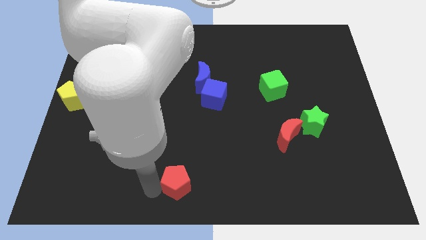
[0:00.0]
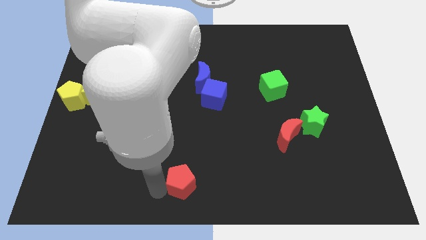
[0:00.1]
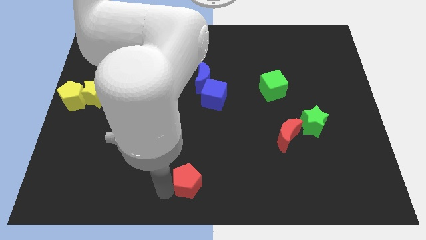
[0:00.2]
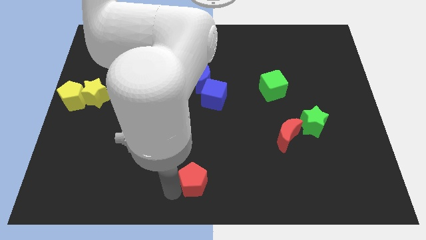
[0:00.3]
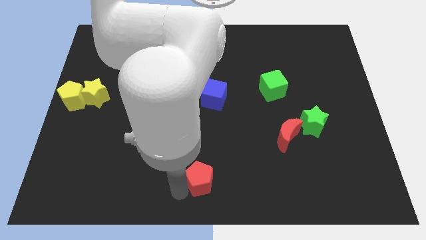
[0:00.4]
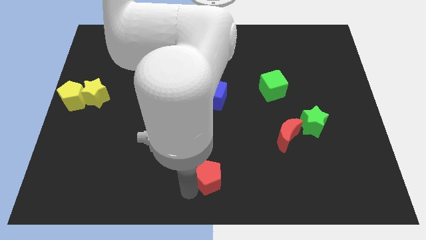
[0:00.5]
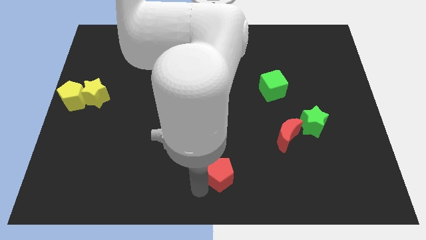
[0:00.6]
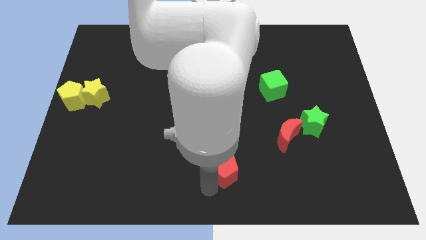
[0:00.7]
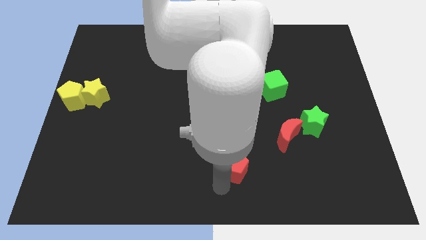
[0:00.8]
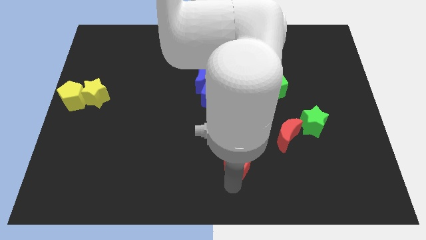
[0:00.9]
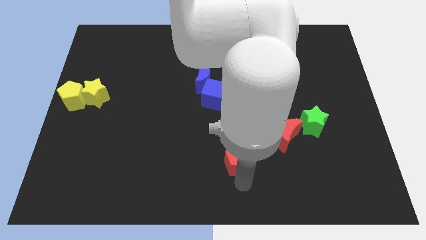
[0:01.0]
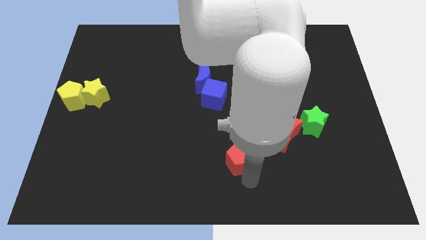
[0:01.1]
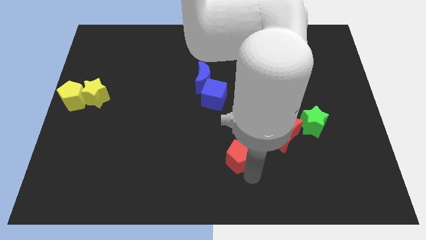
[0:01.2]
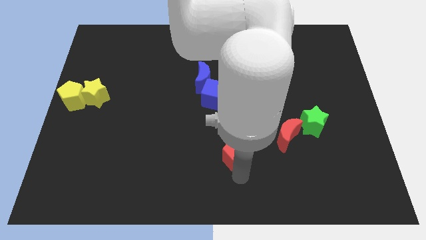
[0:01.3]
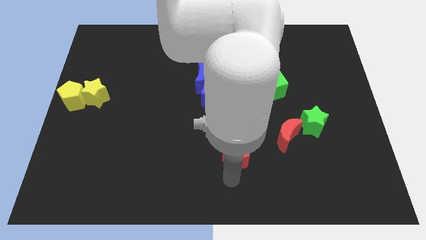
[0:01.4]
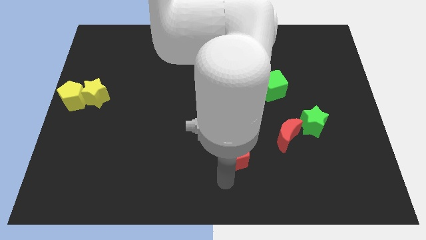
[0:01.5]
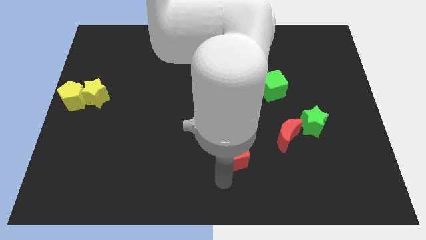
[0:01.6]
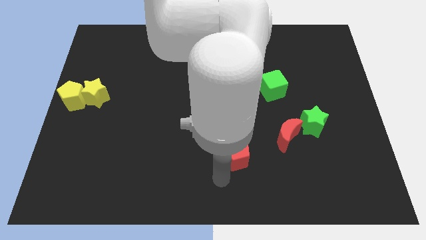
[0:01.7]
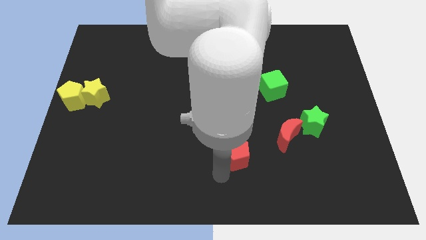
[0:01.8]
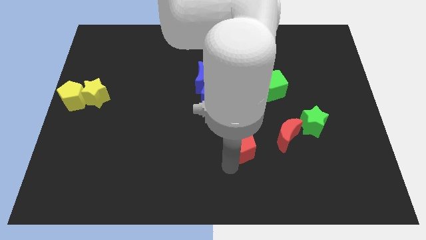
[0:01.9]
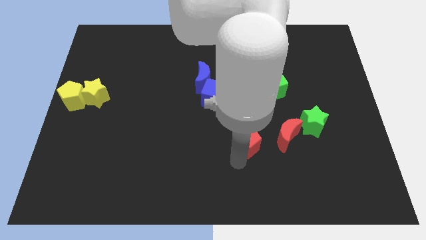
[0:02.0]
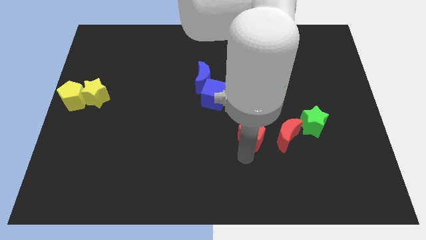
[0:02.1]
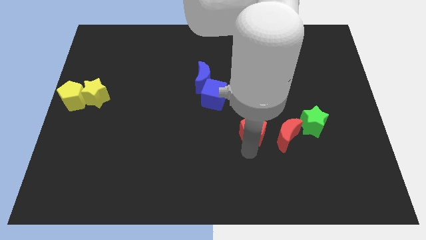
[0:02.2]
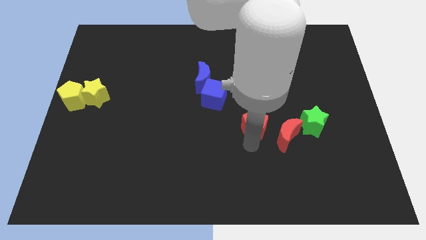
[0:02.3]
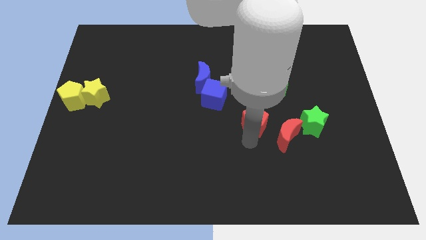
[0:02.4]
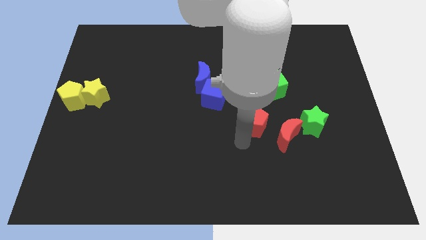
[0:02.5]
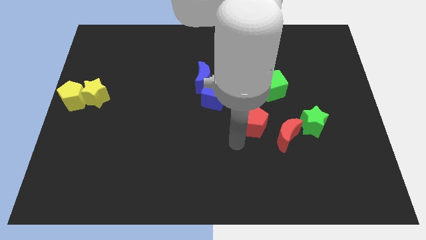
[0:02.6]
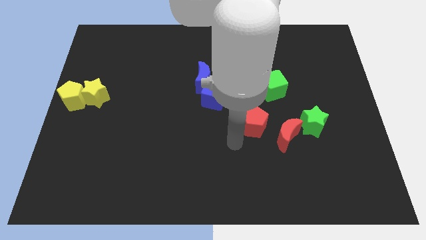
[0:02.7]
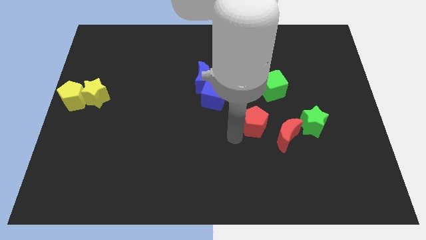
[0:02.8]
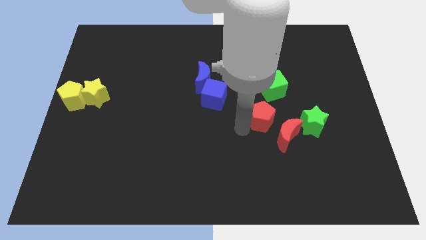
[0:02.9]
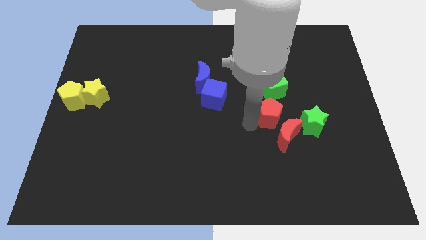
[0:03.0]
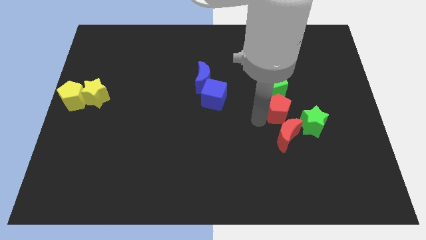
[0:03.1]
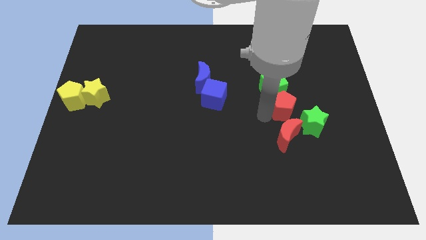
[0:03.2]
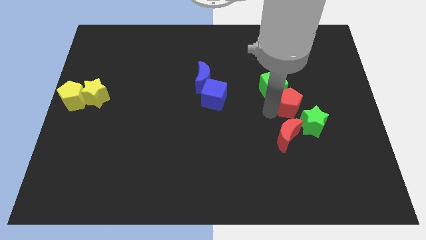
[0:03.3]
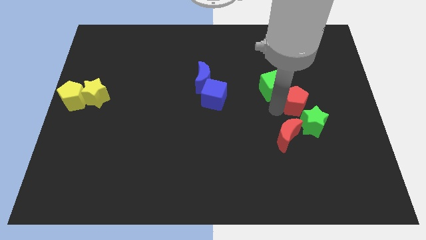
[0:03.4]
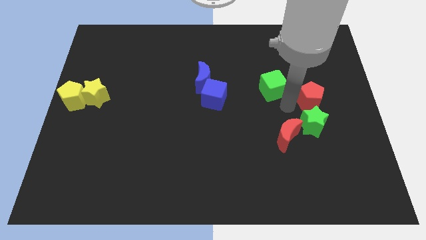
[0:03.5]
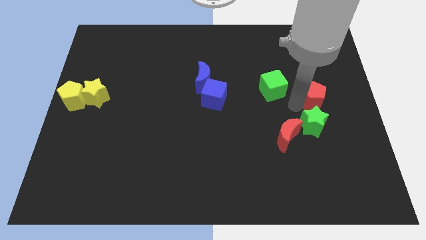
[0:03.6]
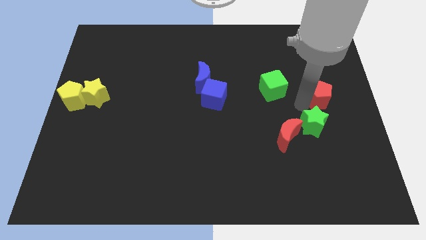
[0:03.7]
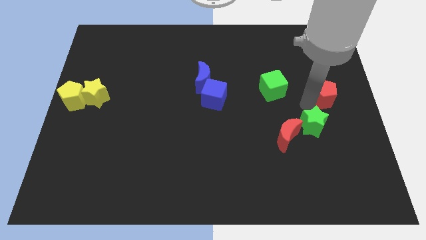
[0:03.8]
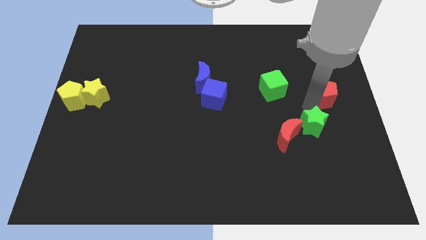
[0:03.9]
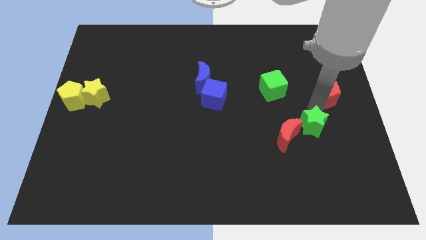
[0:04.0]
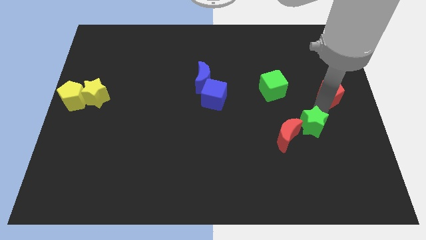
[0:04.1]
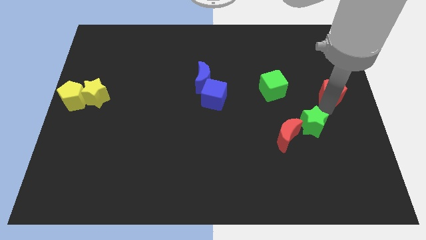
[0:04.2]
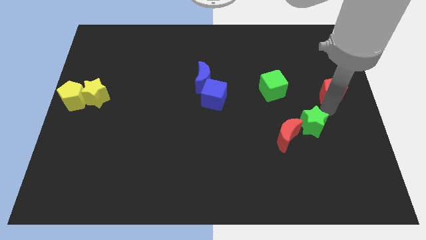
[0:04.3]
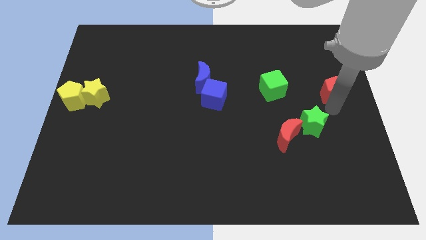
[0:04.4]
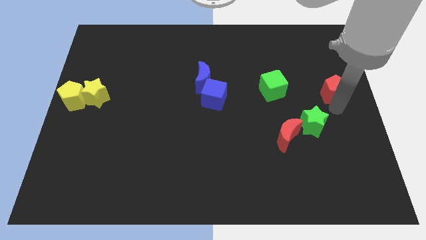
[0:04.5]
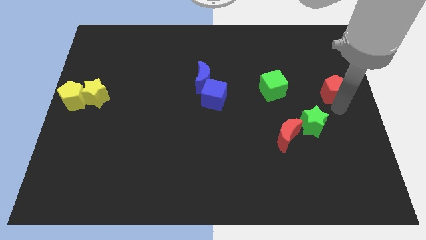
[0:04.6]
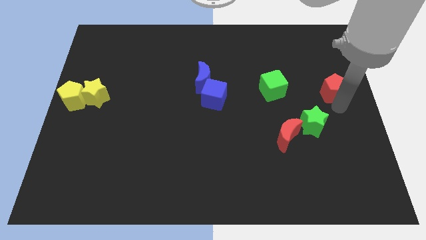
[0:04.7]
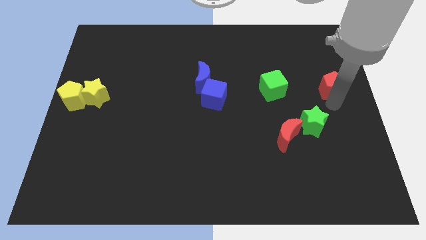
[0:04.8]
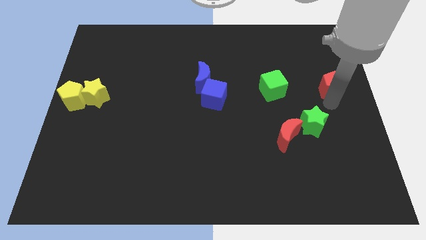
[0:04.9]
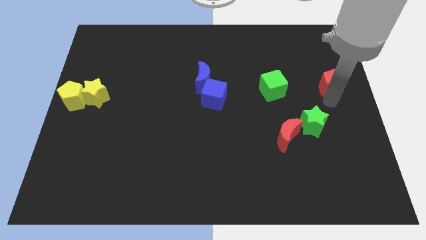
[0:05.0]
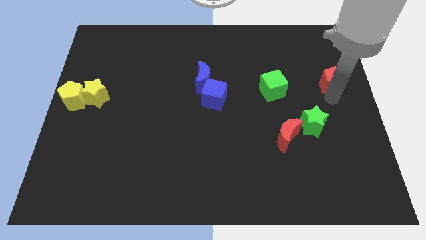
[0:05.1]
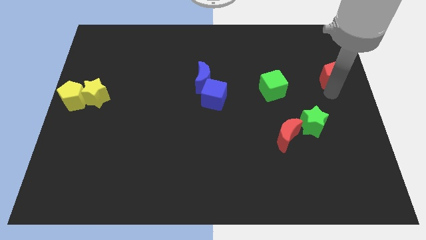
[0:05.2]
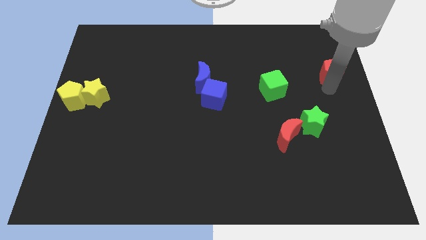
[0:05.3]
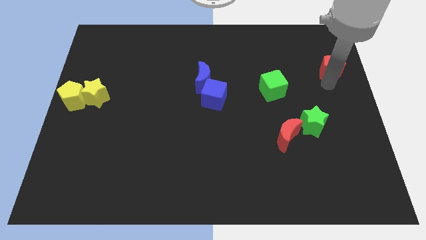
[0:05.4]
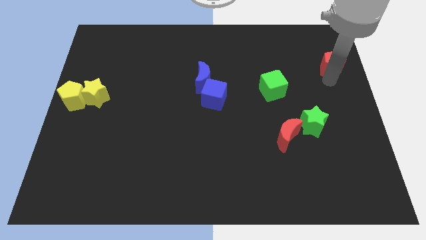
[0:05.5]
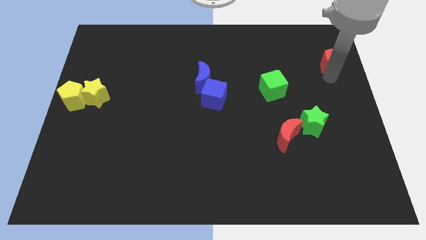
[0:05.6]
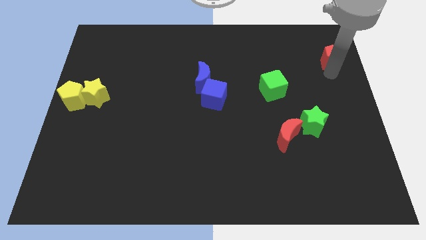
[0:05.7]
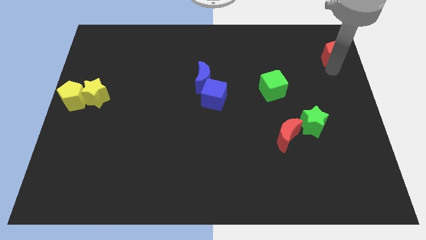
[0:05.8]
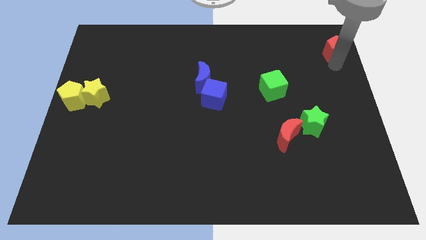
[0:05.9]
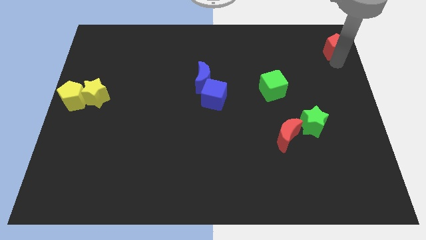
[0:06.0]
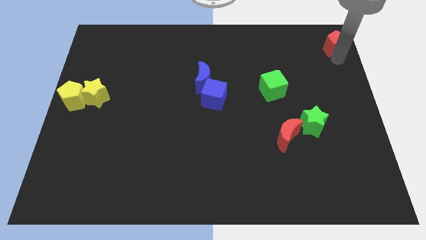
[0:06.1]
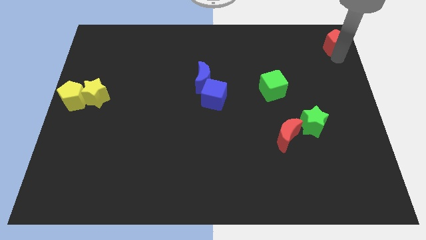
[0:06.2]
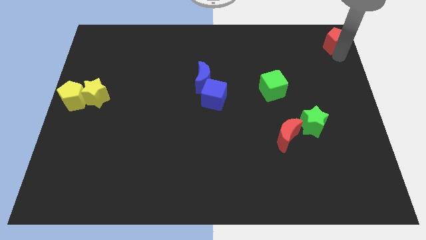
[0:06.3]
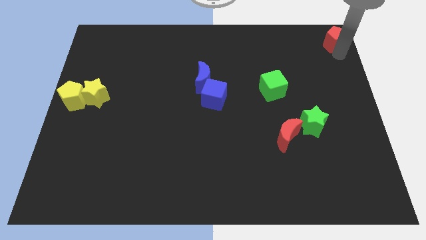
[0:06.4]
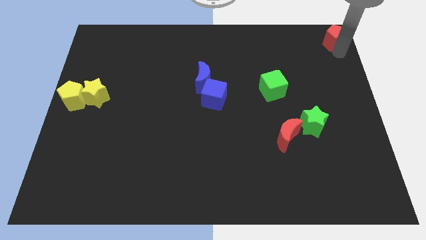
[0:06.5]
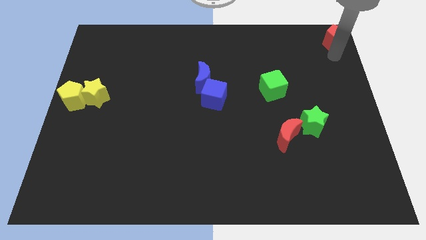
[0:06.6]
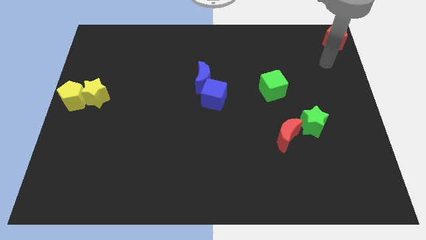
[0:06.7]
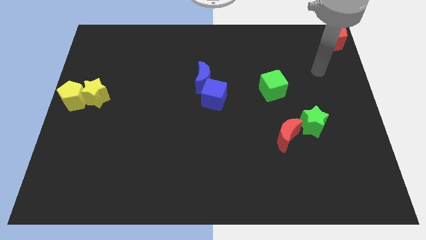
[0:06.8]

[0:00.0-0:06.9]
move the red pentagon on the top right corner of the board

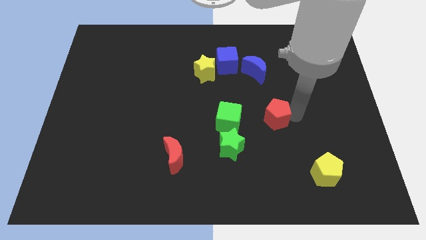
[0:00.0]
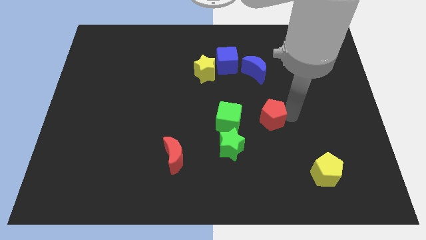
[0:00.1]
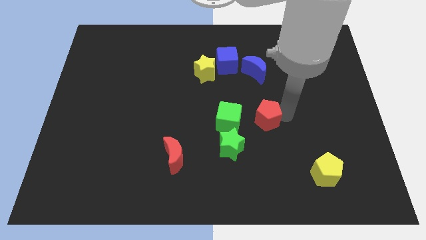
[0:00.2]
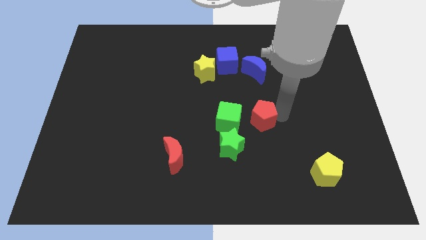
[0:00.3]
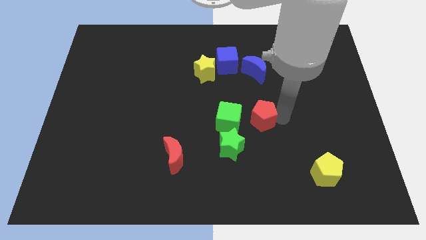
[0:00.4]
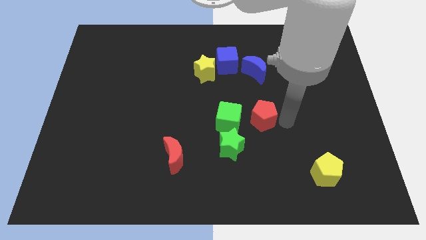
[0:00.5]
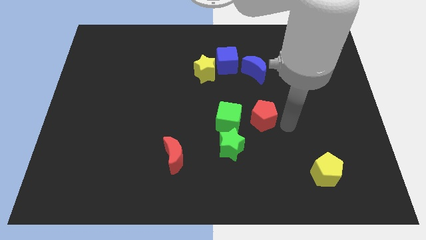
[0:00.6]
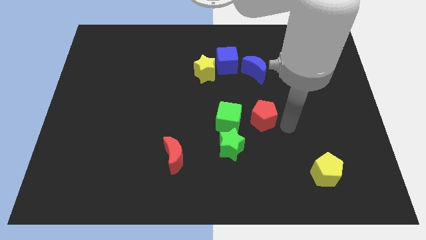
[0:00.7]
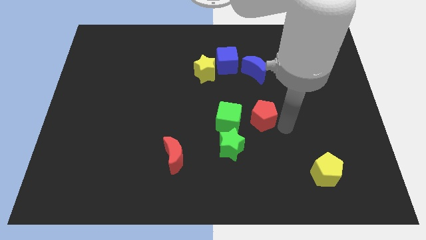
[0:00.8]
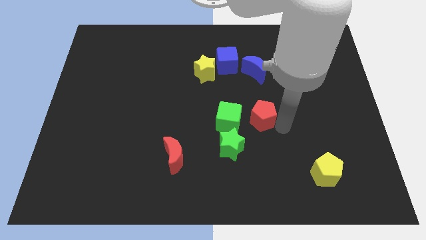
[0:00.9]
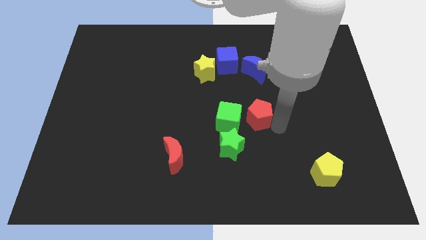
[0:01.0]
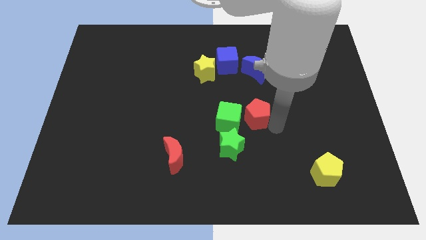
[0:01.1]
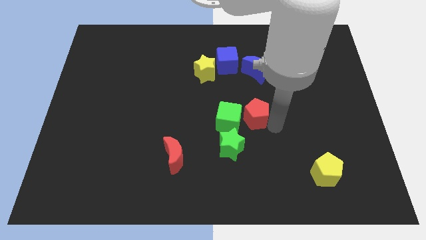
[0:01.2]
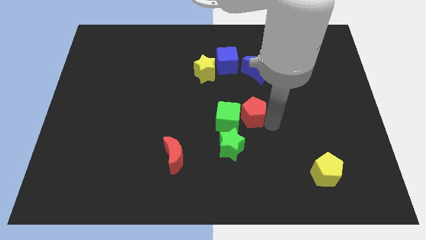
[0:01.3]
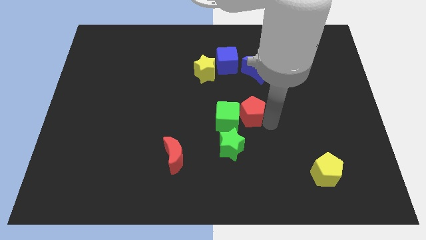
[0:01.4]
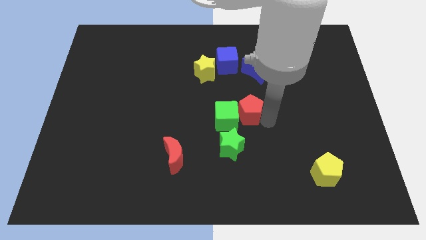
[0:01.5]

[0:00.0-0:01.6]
push the red pentagon in the green cube

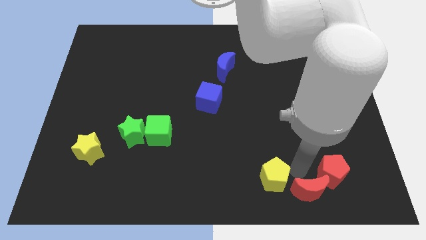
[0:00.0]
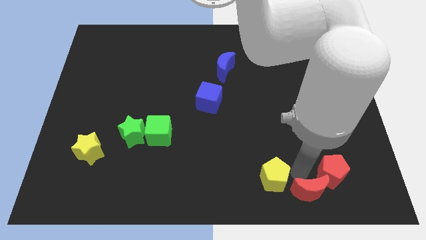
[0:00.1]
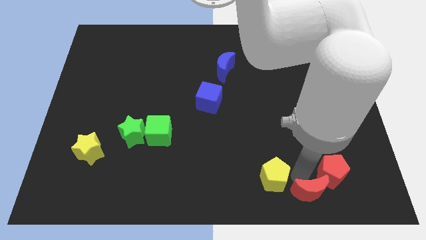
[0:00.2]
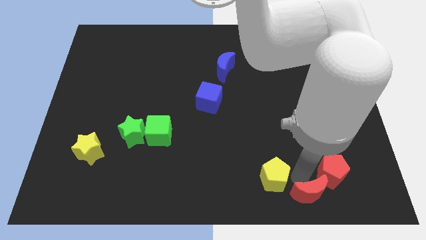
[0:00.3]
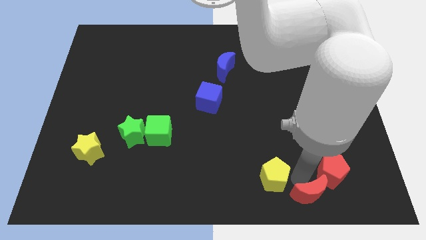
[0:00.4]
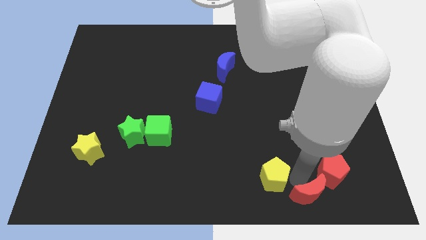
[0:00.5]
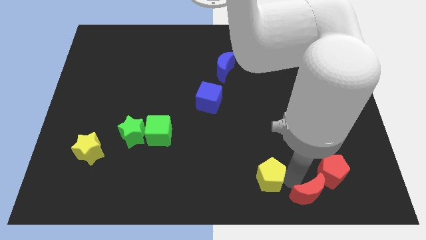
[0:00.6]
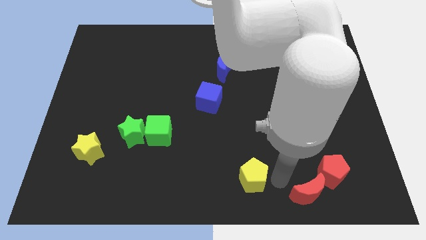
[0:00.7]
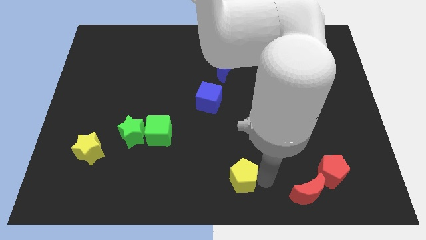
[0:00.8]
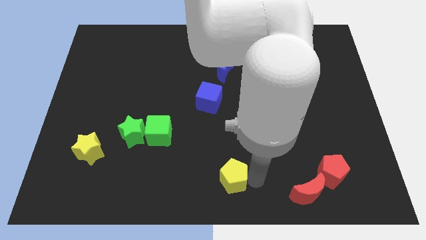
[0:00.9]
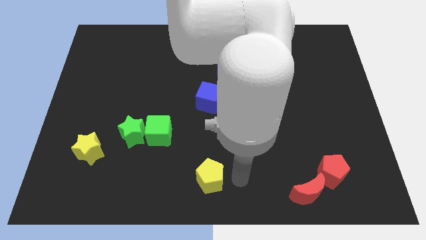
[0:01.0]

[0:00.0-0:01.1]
move the yellow pentagon vertically below the blue cube
